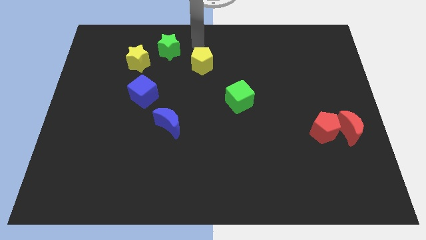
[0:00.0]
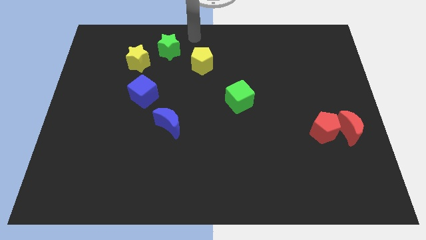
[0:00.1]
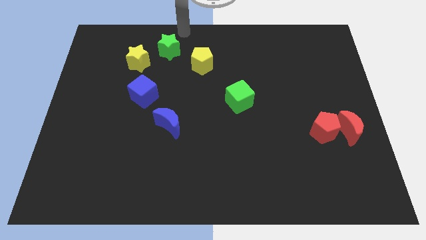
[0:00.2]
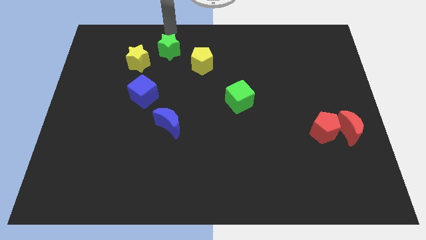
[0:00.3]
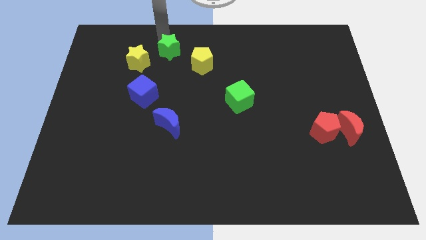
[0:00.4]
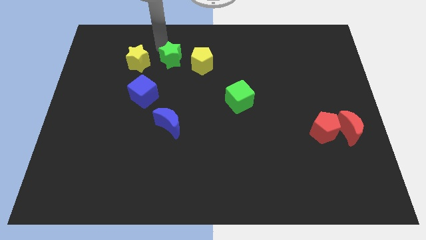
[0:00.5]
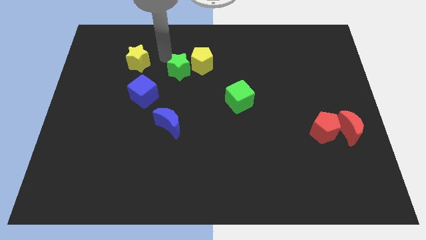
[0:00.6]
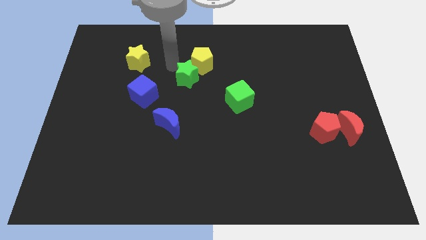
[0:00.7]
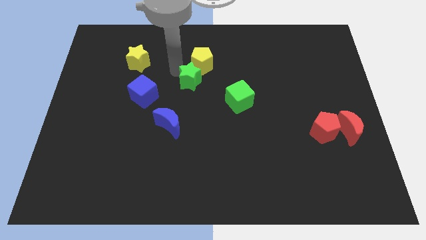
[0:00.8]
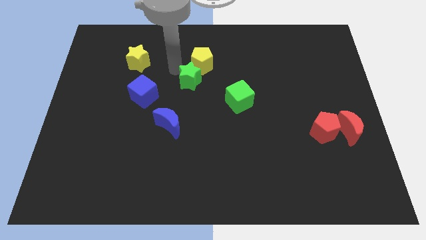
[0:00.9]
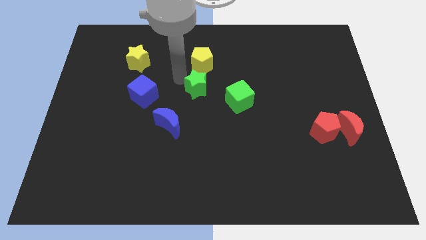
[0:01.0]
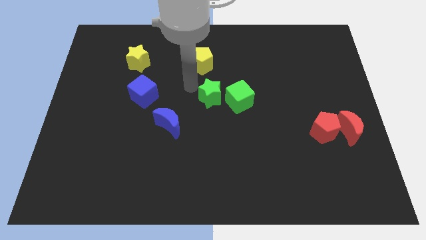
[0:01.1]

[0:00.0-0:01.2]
place the green star vertically below the yellow pentagon

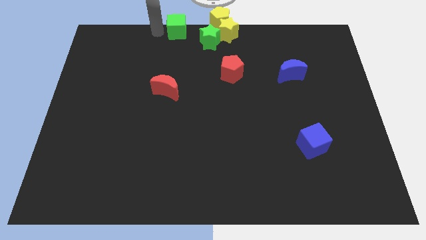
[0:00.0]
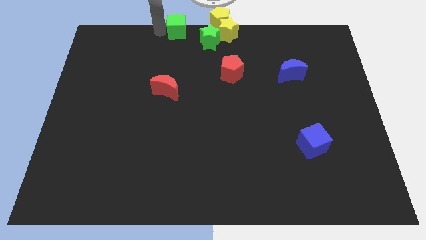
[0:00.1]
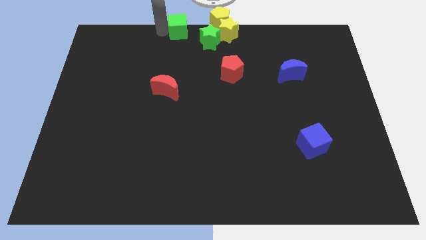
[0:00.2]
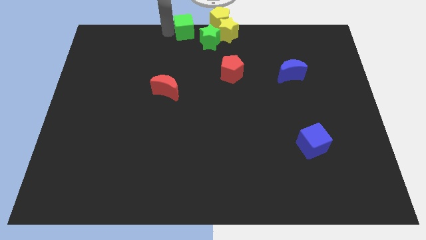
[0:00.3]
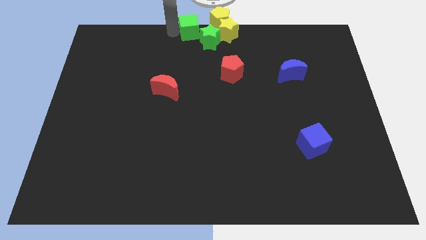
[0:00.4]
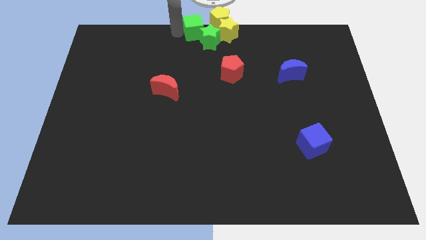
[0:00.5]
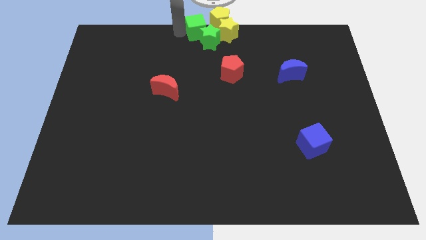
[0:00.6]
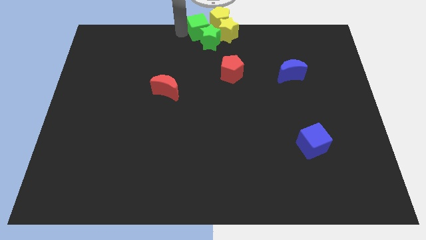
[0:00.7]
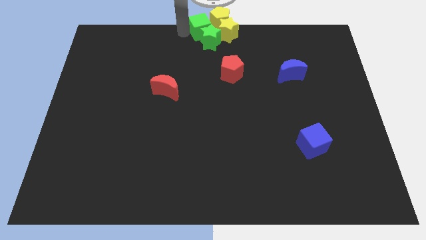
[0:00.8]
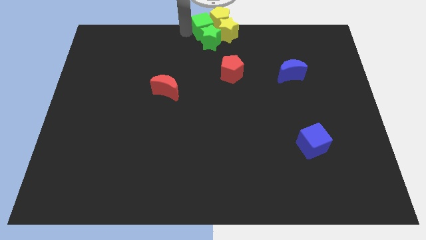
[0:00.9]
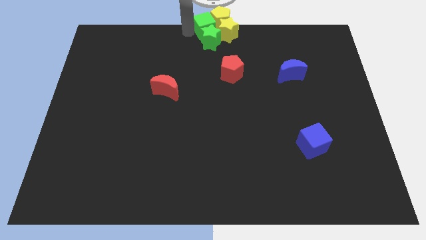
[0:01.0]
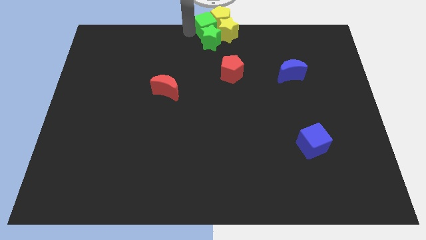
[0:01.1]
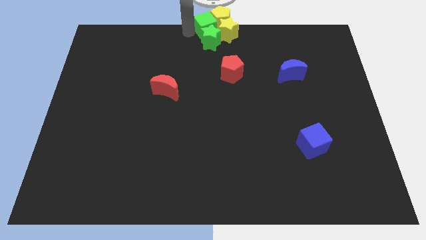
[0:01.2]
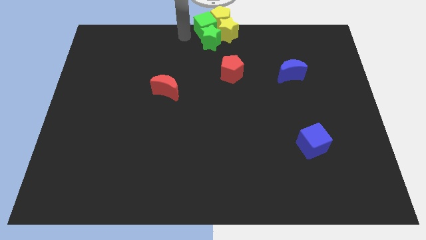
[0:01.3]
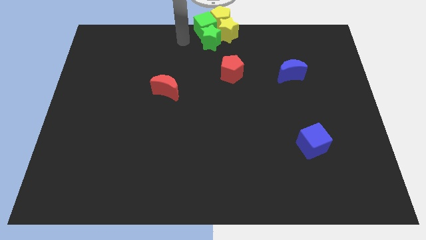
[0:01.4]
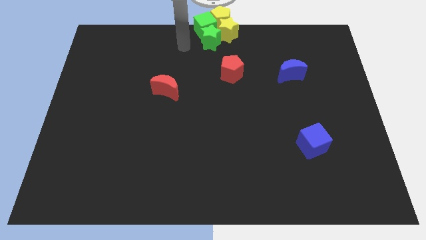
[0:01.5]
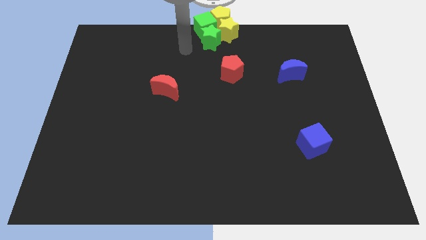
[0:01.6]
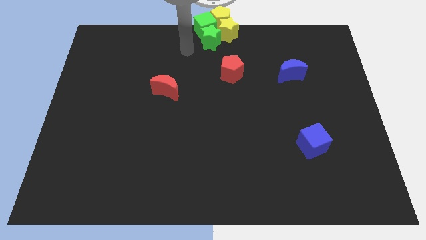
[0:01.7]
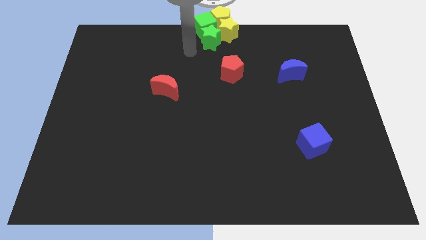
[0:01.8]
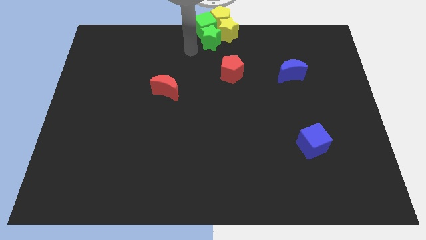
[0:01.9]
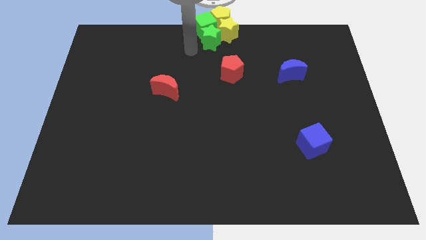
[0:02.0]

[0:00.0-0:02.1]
make a group of green and yellow blocks

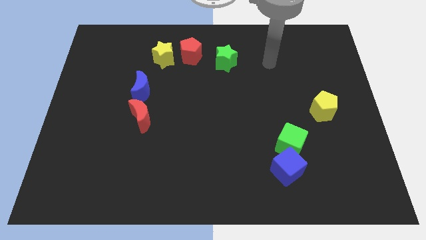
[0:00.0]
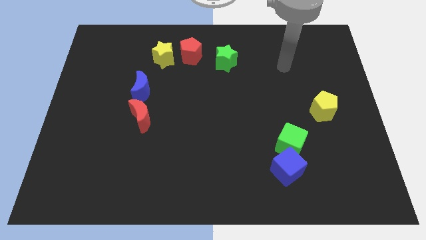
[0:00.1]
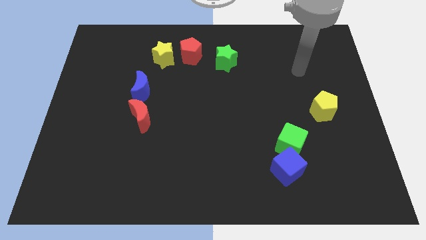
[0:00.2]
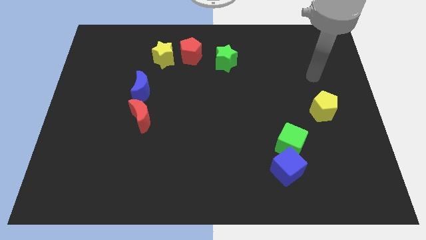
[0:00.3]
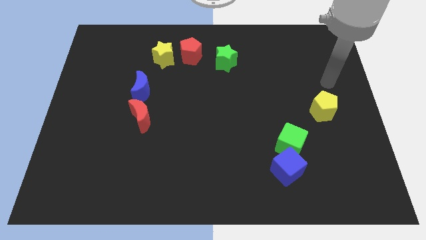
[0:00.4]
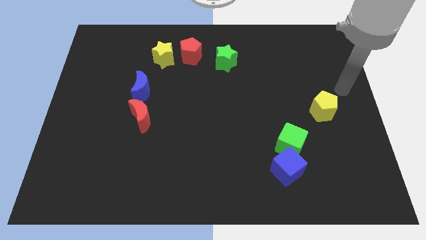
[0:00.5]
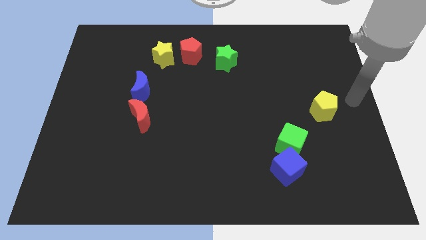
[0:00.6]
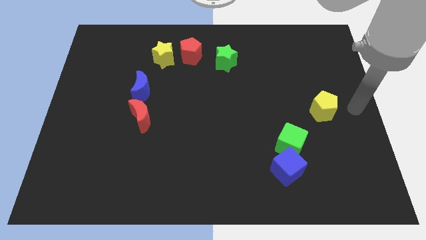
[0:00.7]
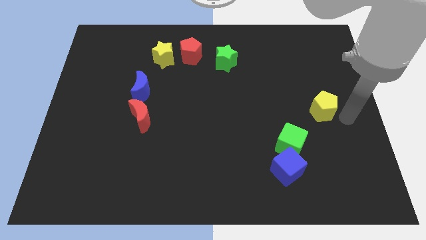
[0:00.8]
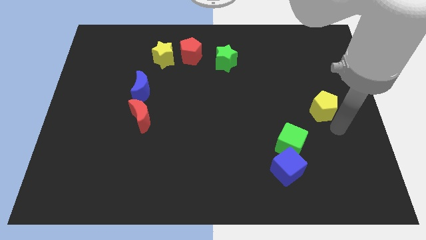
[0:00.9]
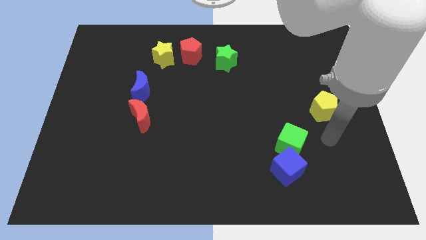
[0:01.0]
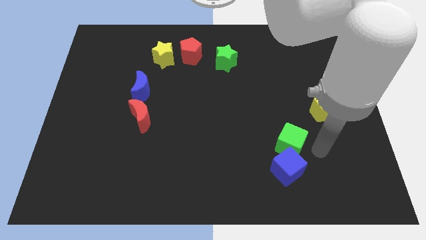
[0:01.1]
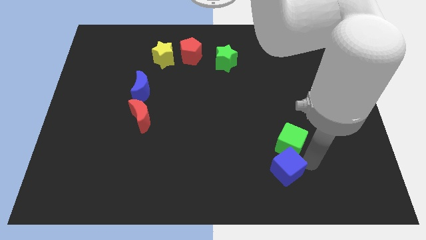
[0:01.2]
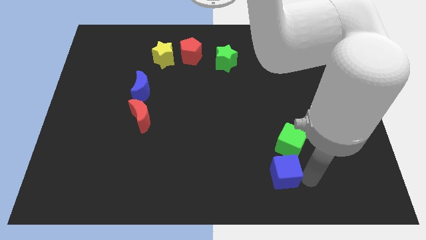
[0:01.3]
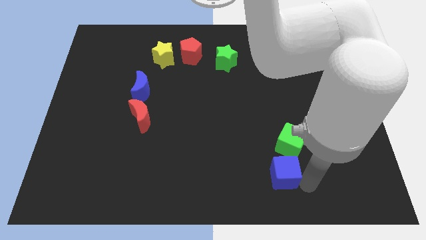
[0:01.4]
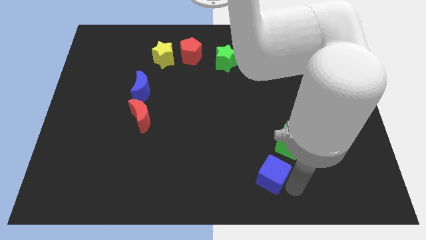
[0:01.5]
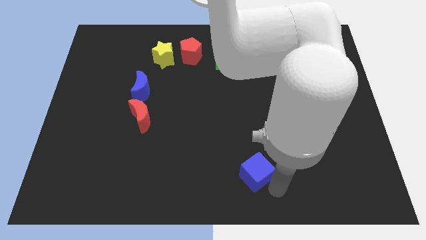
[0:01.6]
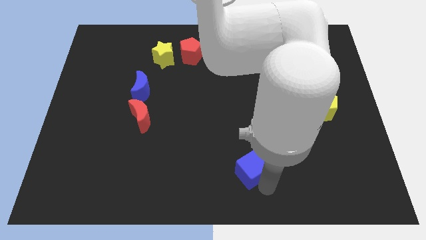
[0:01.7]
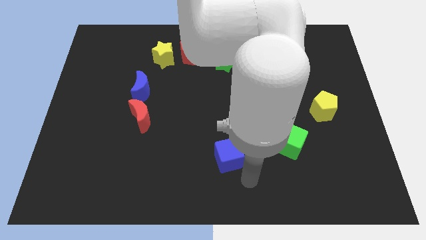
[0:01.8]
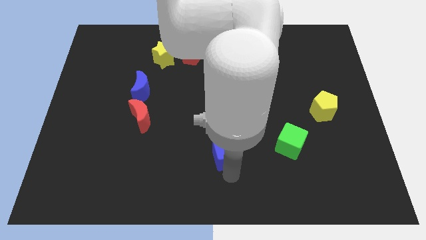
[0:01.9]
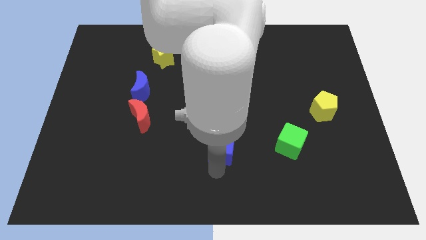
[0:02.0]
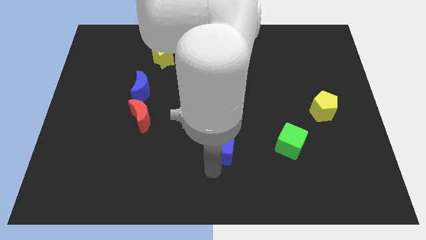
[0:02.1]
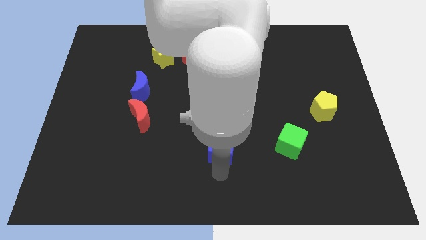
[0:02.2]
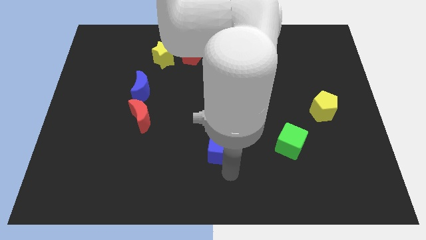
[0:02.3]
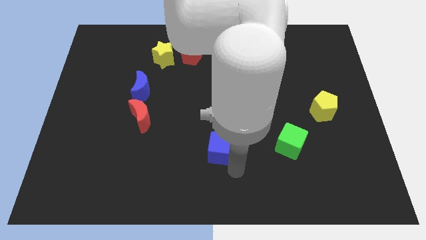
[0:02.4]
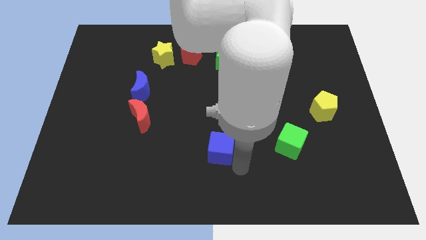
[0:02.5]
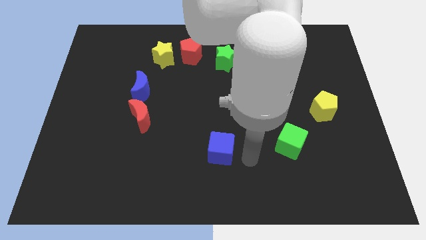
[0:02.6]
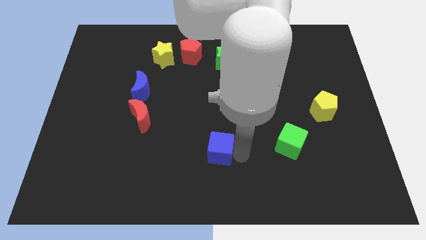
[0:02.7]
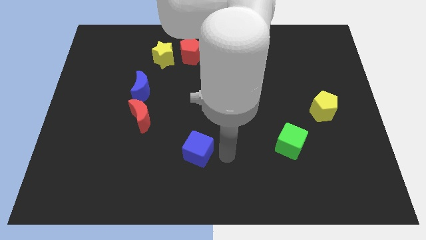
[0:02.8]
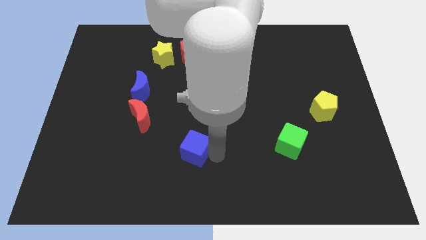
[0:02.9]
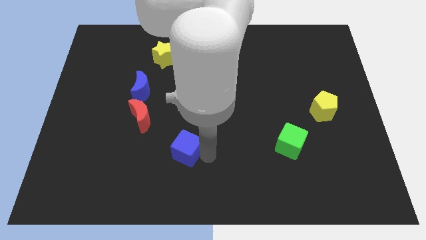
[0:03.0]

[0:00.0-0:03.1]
separate the blue cube from the green cube

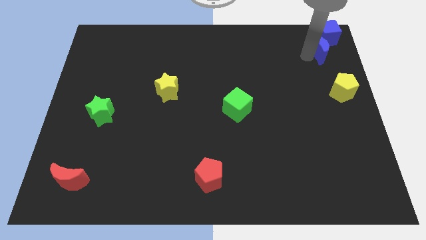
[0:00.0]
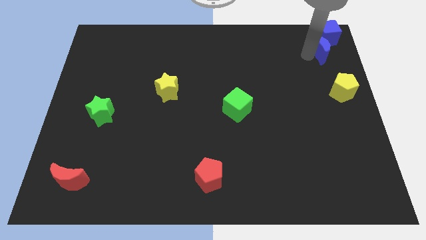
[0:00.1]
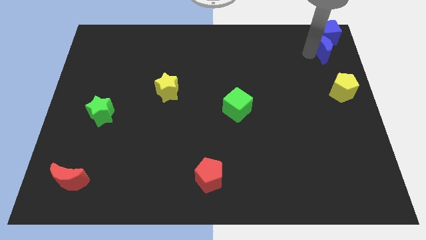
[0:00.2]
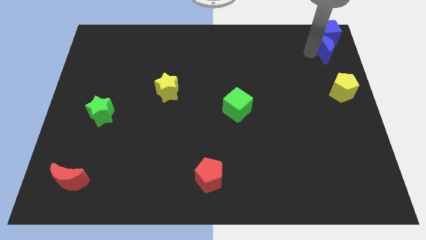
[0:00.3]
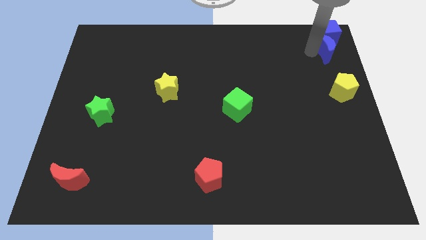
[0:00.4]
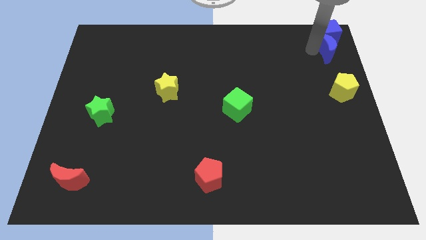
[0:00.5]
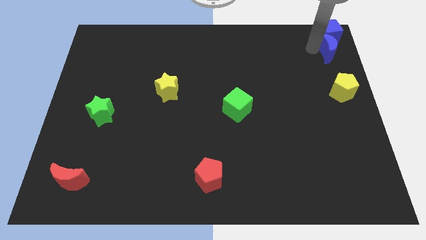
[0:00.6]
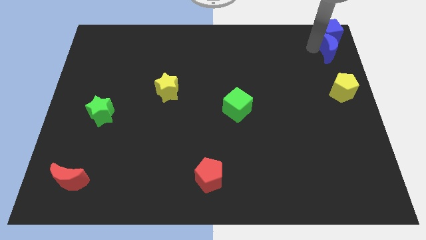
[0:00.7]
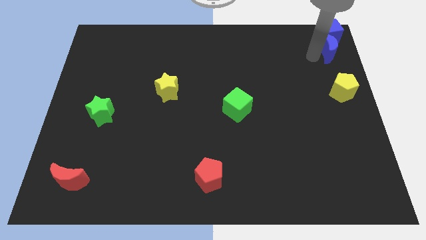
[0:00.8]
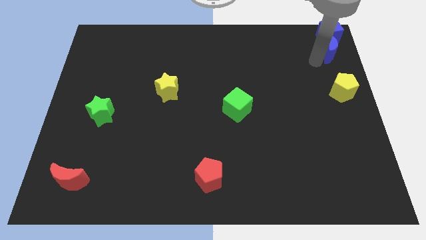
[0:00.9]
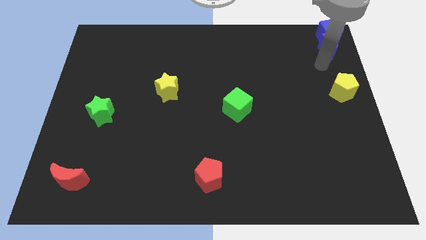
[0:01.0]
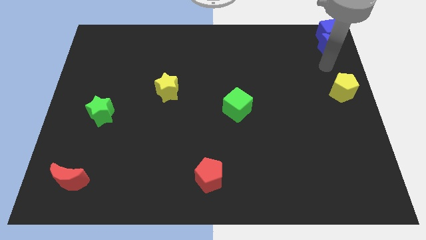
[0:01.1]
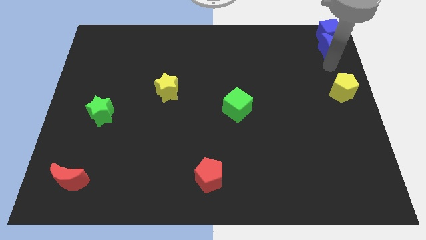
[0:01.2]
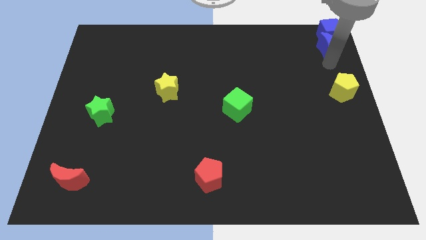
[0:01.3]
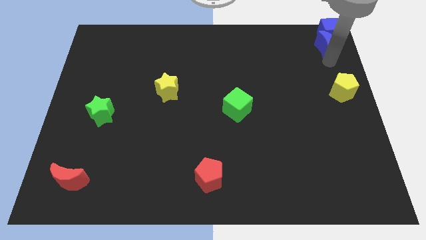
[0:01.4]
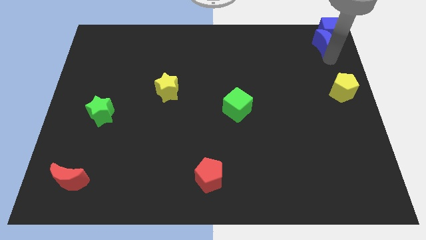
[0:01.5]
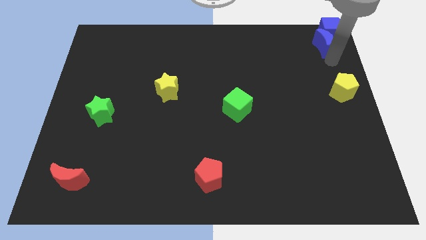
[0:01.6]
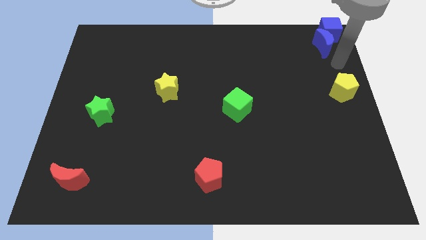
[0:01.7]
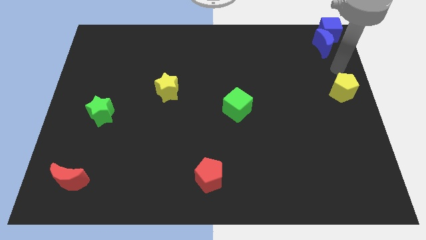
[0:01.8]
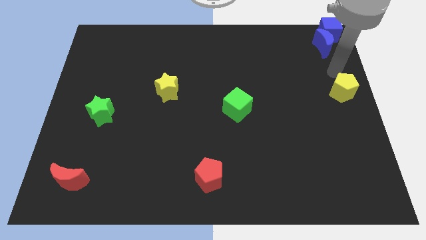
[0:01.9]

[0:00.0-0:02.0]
place blue moon to the top right corner of the board

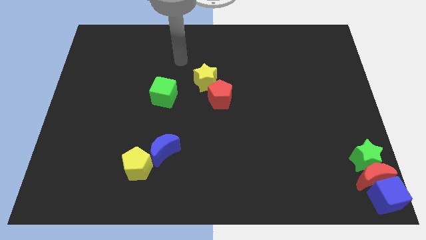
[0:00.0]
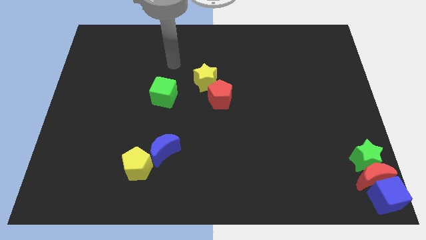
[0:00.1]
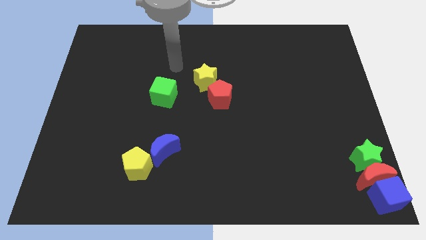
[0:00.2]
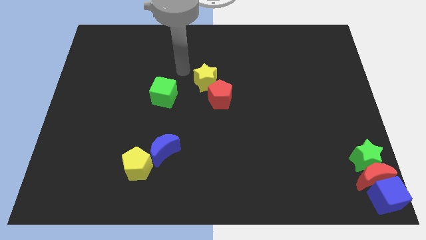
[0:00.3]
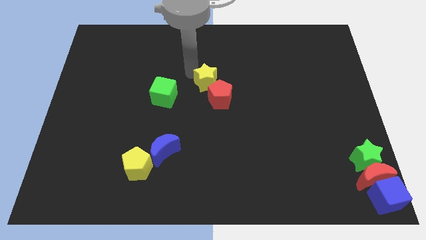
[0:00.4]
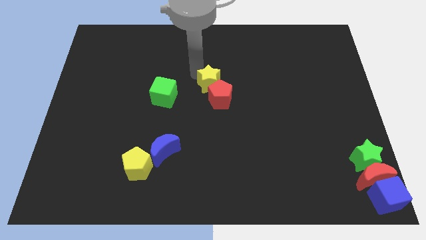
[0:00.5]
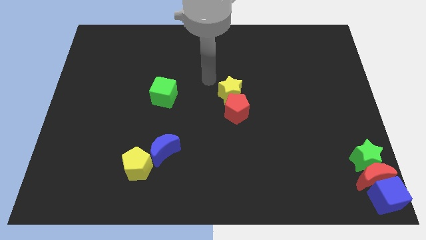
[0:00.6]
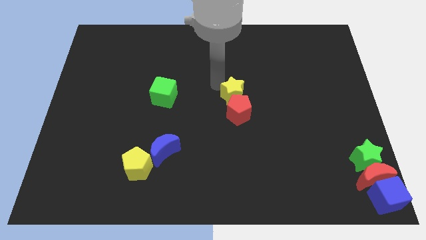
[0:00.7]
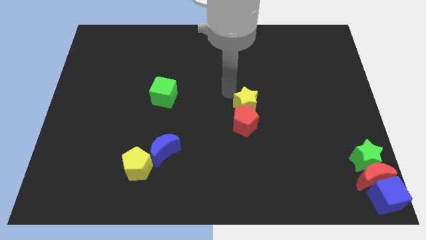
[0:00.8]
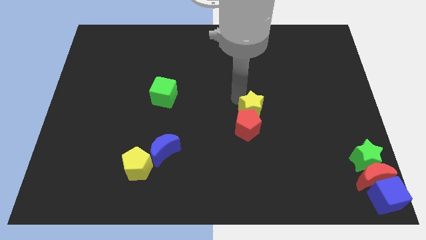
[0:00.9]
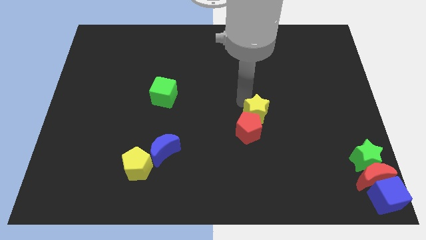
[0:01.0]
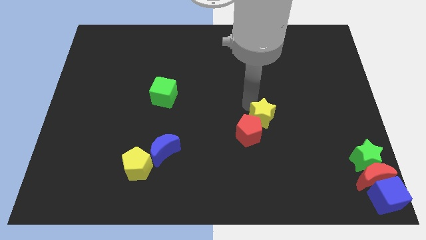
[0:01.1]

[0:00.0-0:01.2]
push yellow star into the red pentagon
